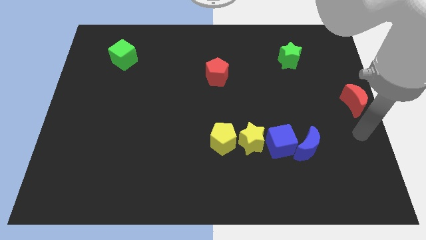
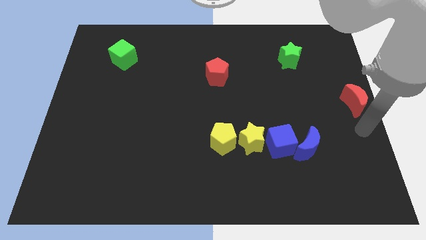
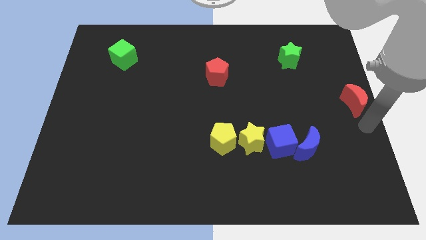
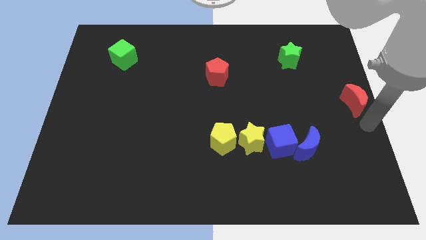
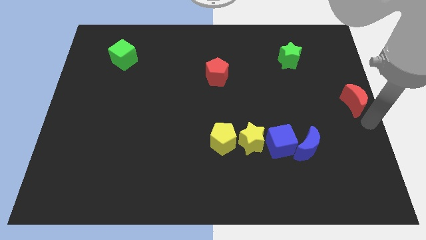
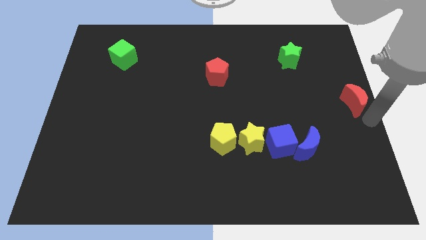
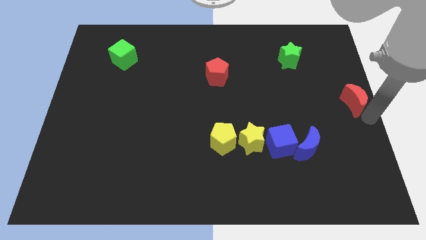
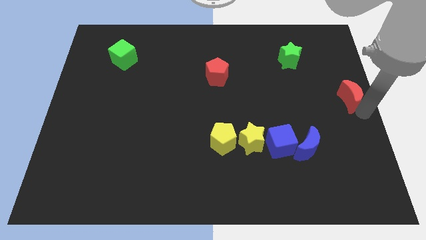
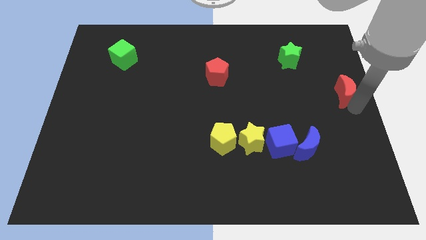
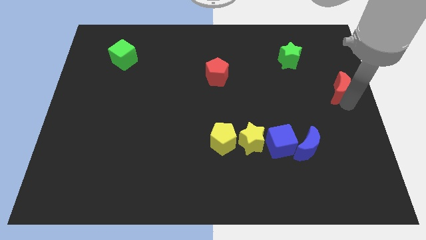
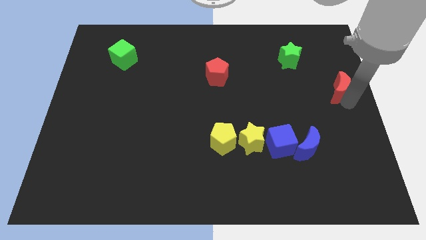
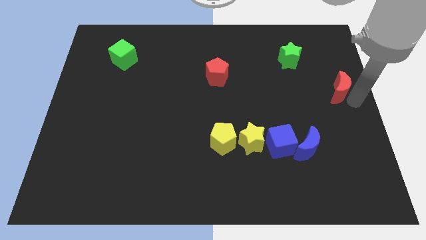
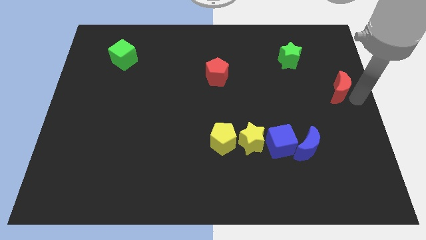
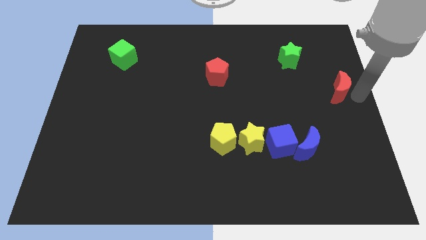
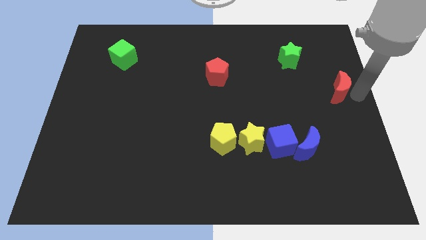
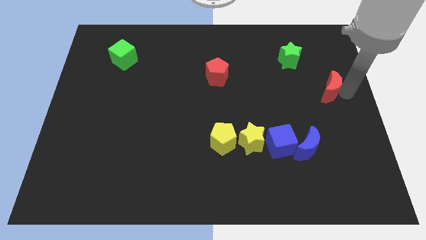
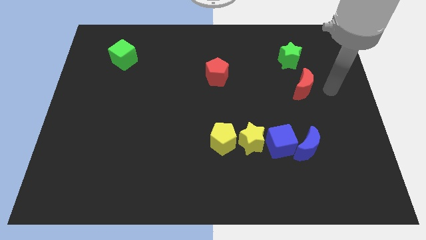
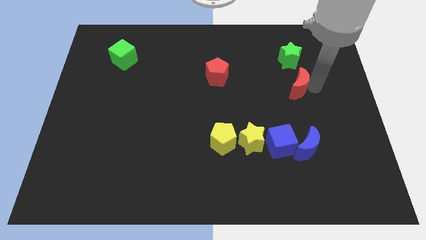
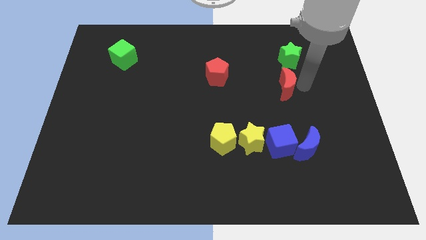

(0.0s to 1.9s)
push the red crescent towards the top left

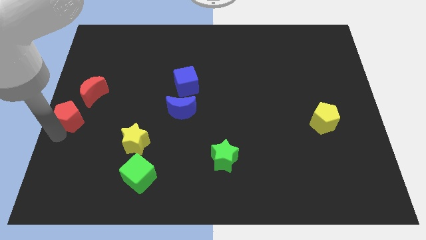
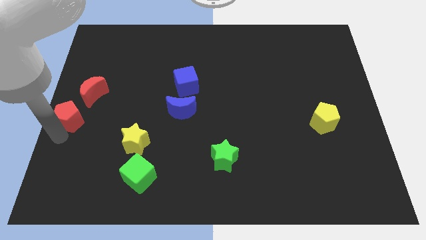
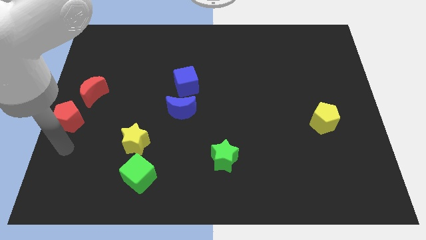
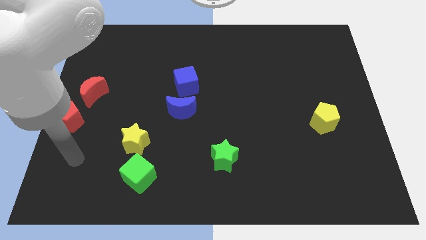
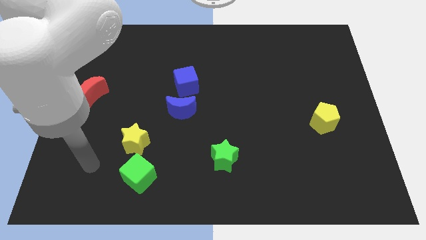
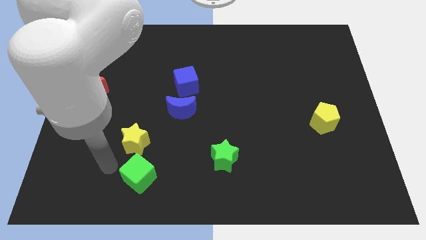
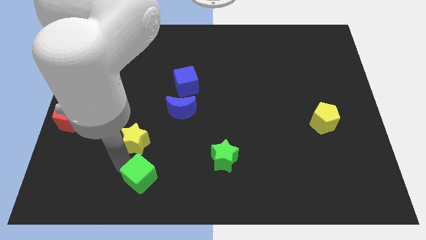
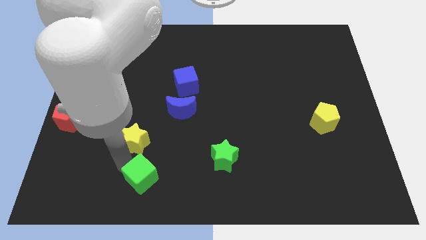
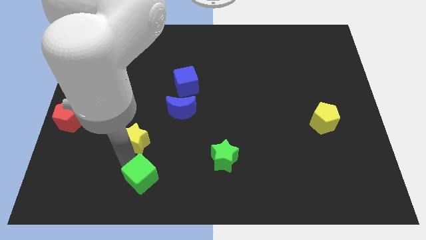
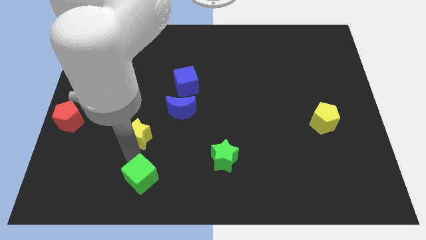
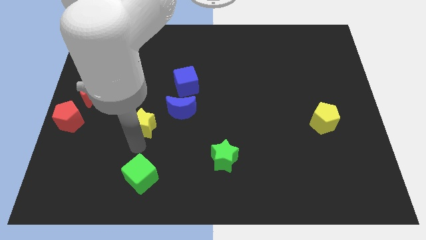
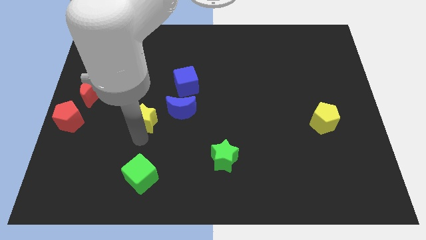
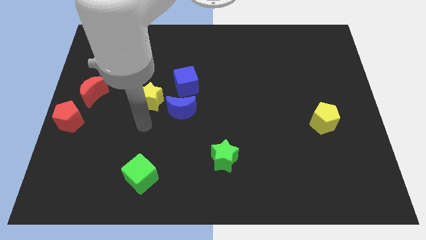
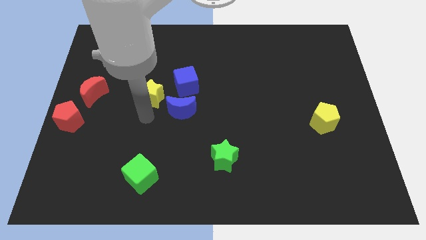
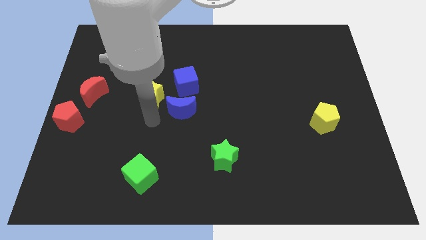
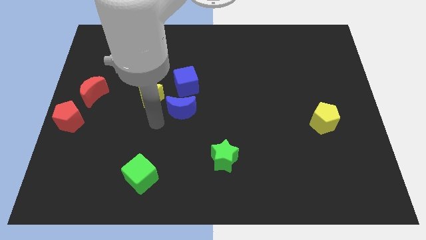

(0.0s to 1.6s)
separate yellow star from the green cube

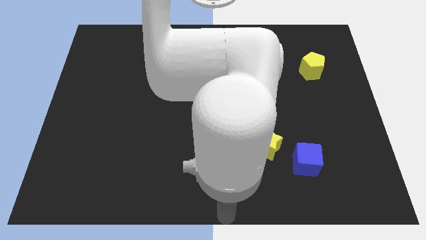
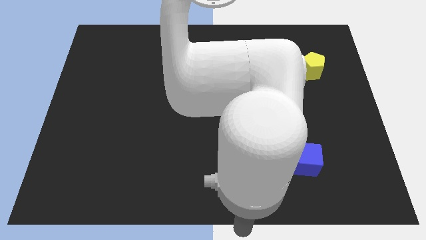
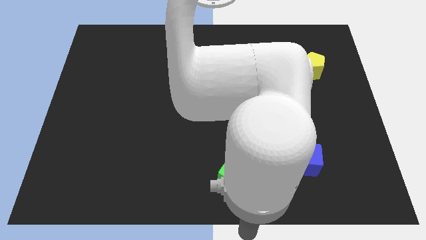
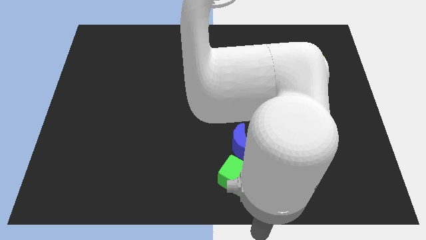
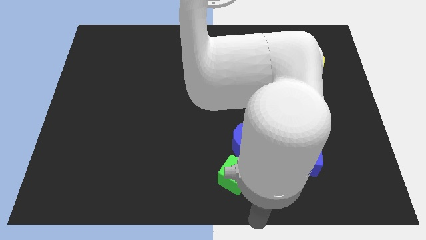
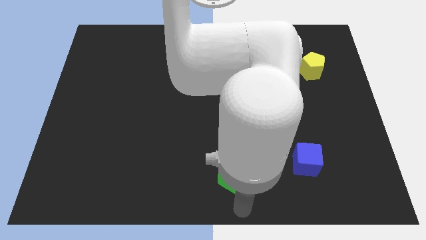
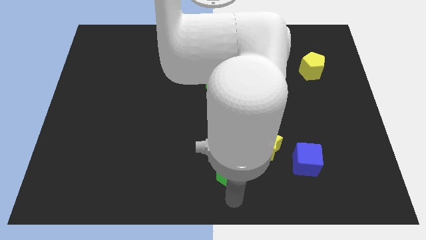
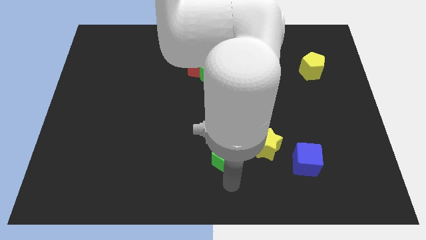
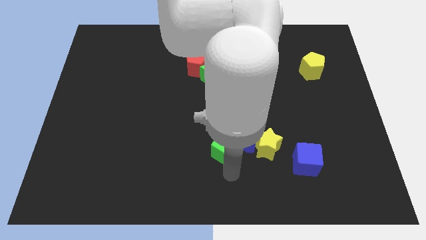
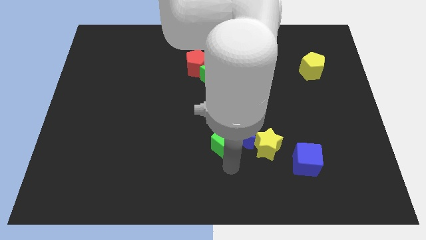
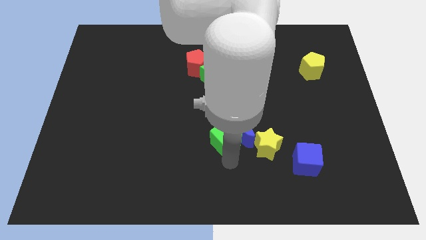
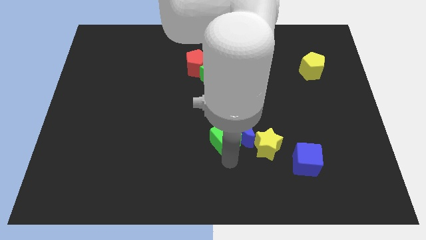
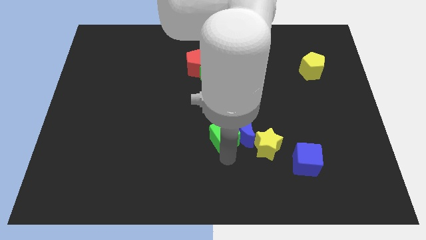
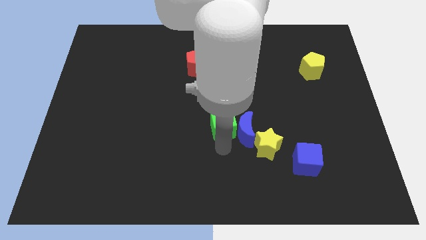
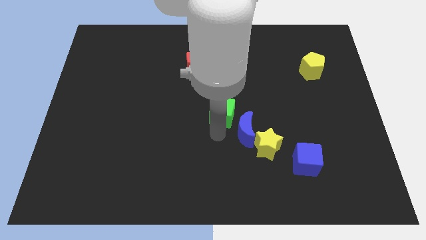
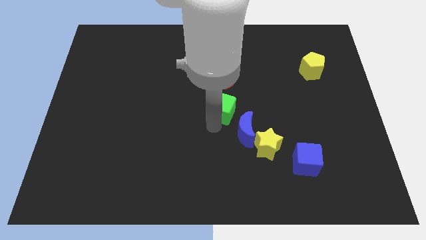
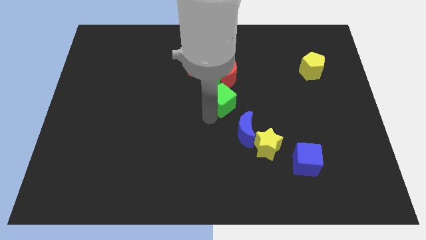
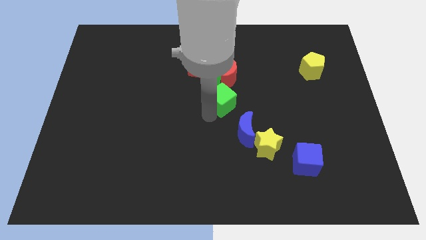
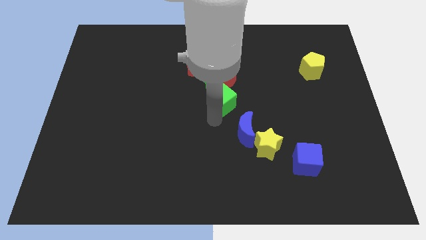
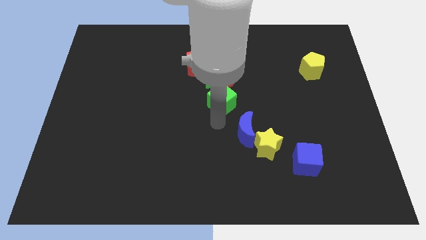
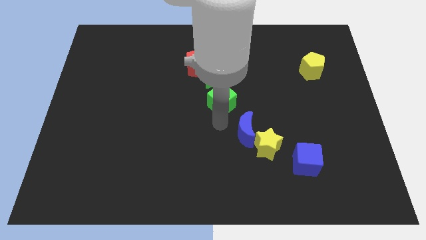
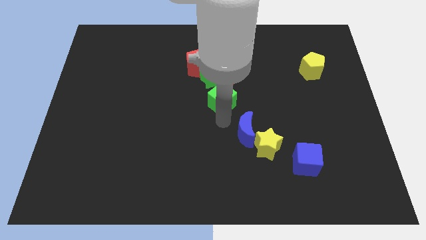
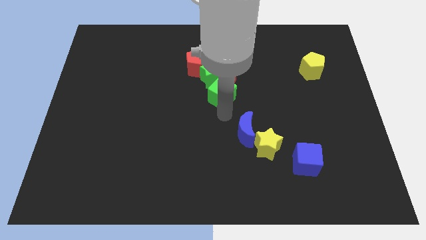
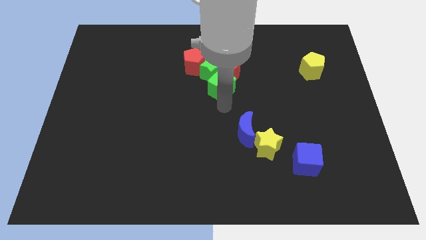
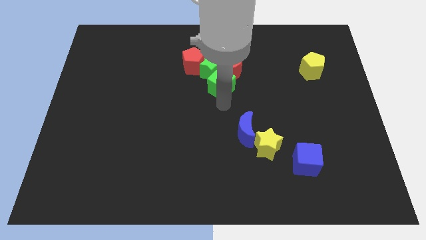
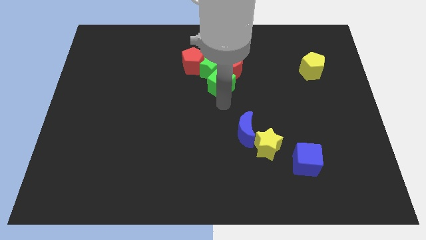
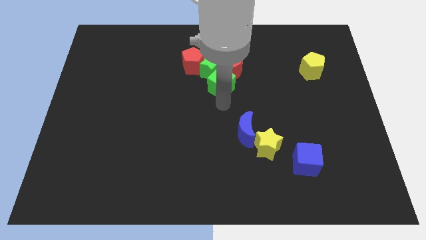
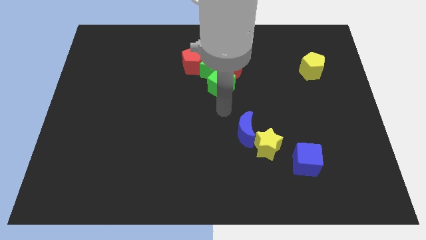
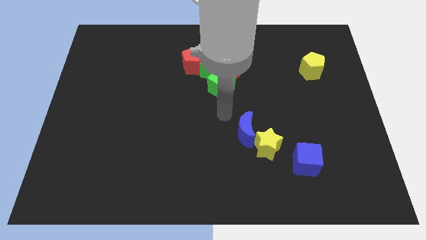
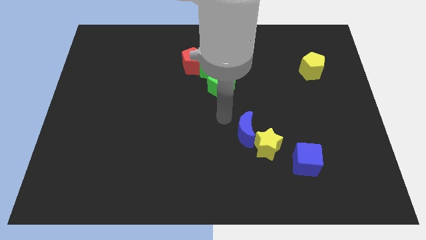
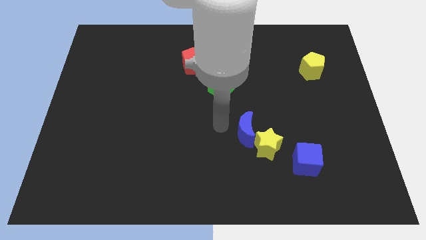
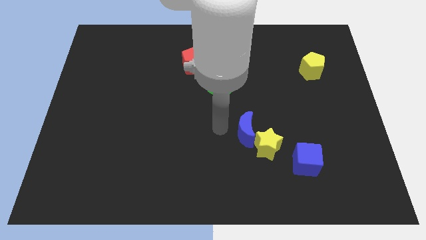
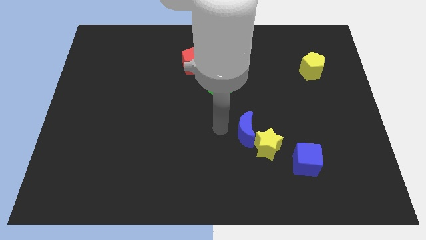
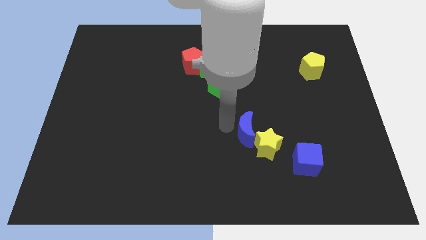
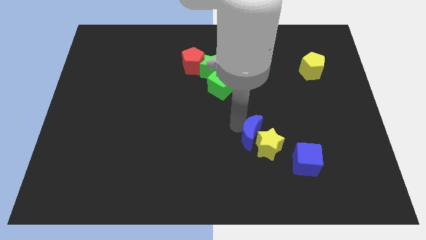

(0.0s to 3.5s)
move the green cube to the center of the board

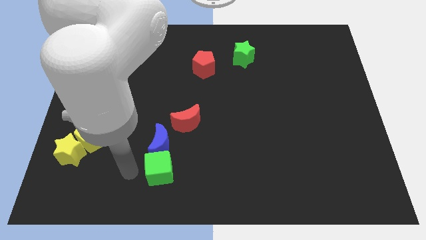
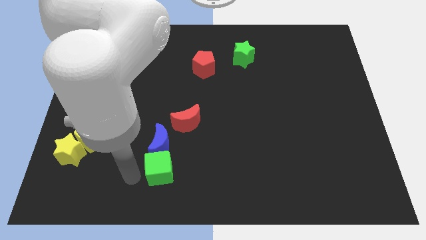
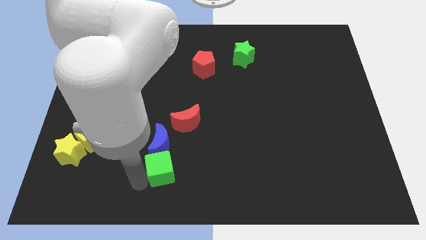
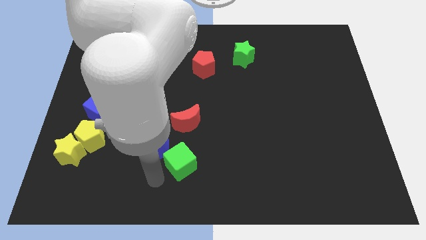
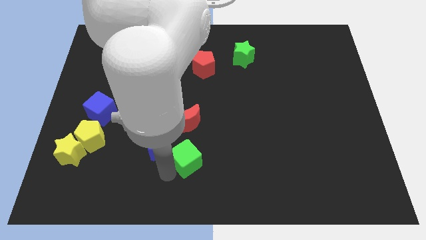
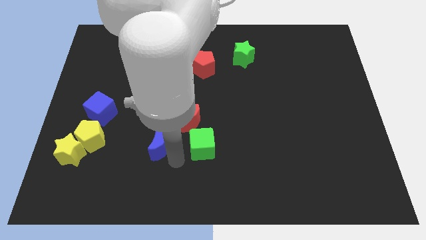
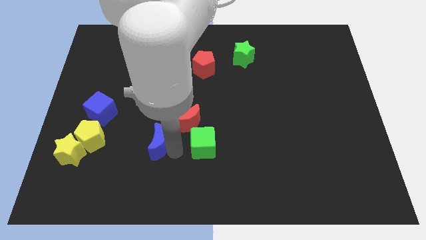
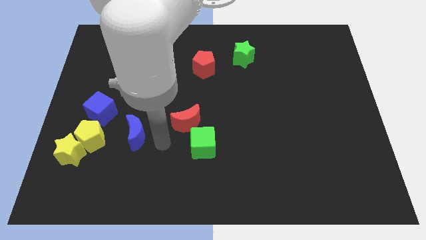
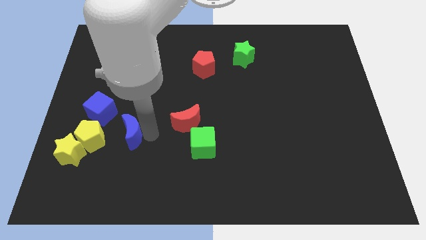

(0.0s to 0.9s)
push the green cube to the bottom side of the red moon

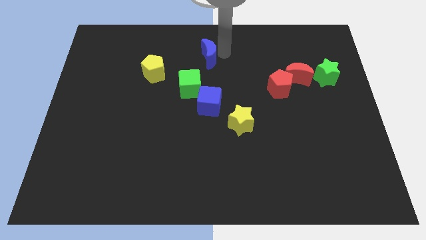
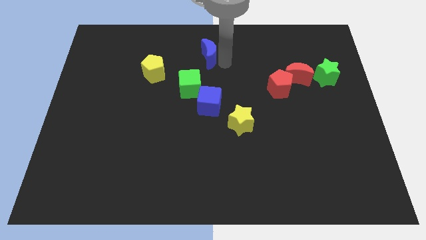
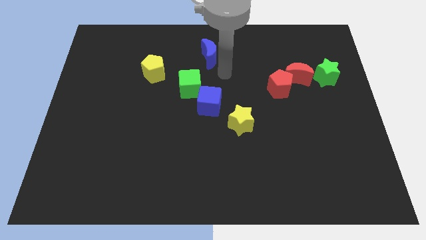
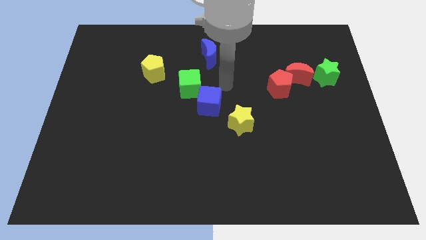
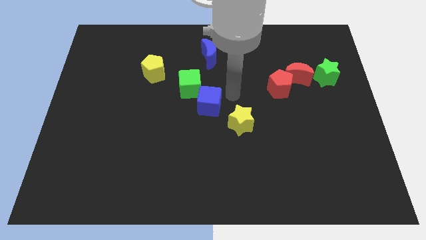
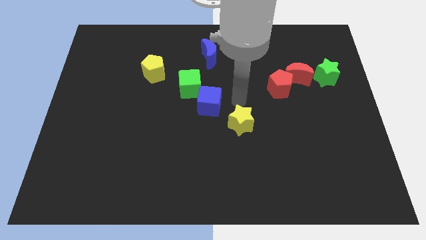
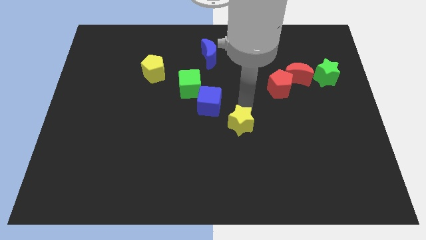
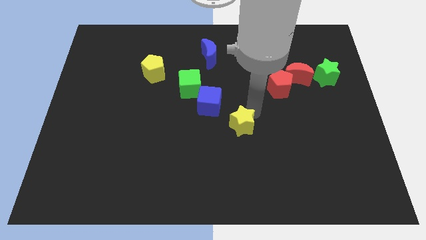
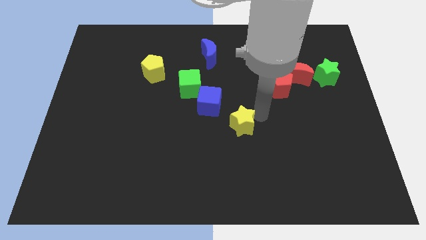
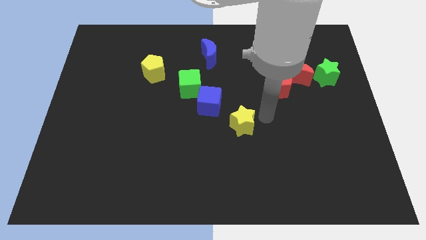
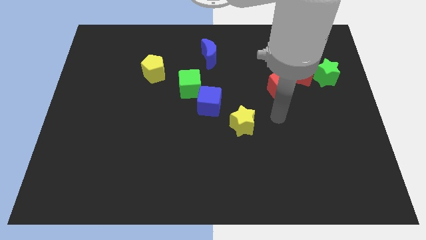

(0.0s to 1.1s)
touch the yellow star
